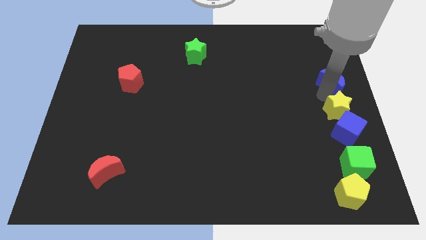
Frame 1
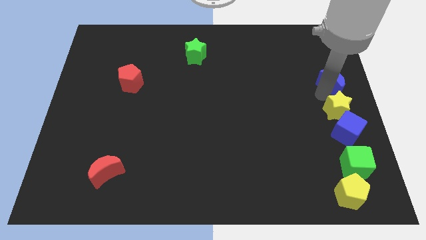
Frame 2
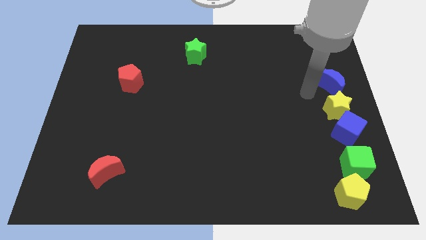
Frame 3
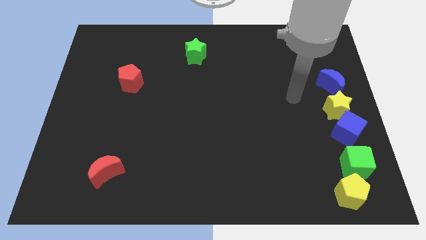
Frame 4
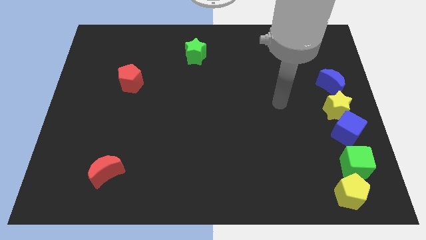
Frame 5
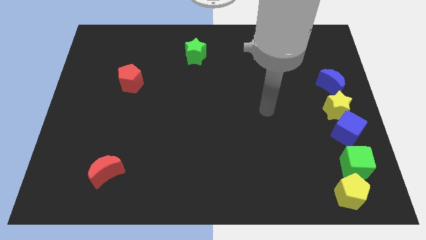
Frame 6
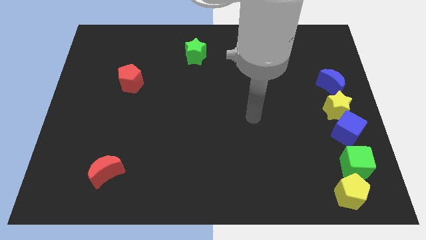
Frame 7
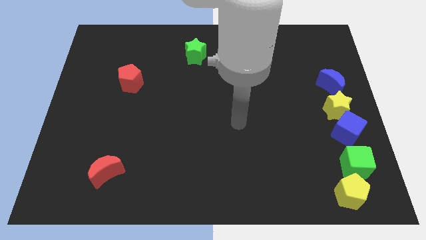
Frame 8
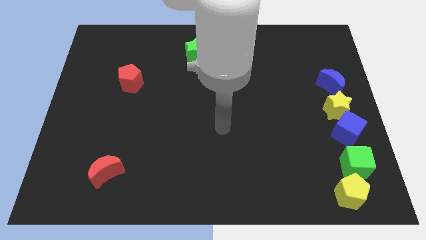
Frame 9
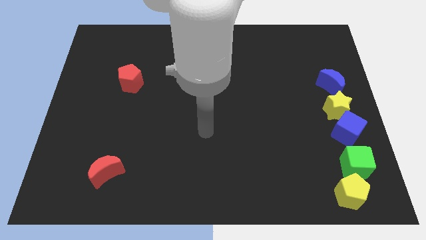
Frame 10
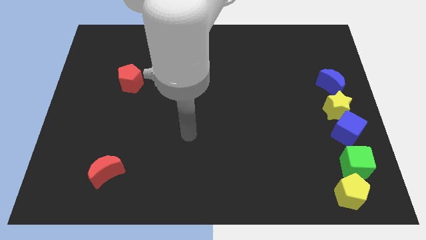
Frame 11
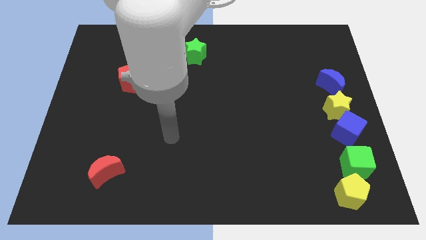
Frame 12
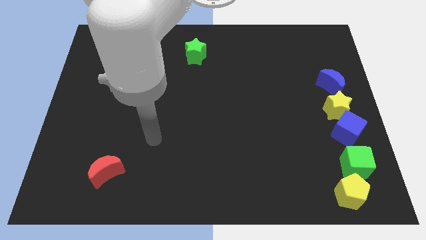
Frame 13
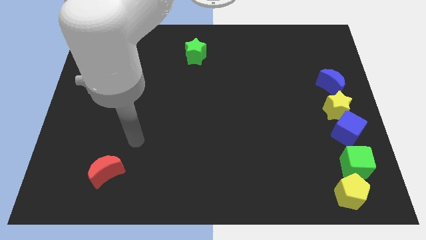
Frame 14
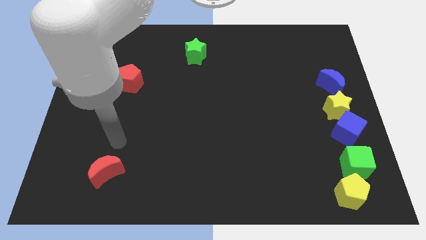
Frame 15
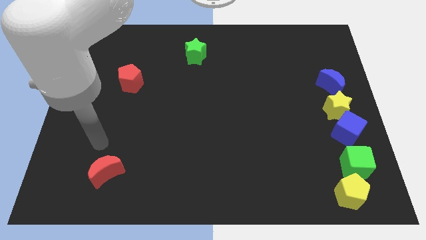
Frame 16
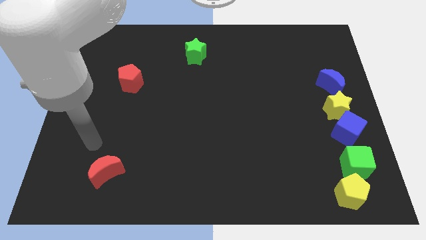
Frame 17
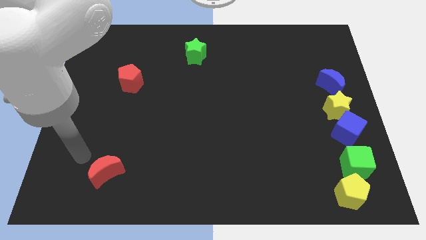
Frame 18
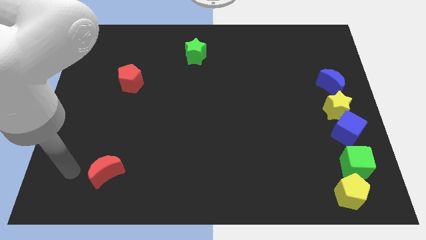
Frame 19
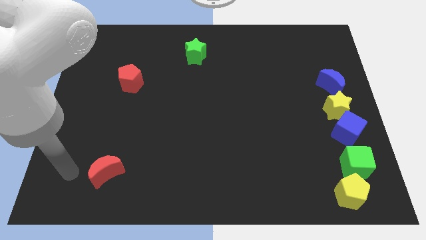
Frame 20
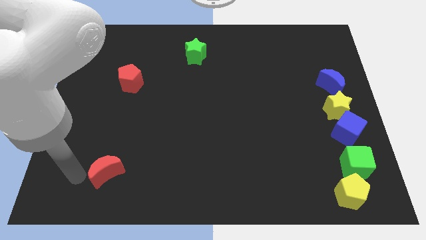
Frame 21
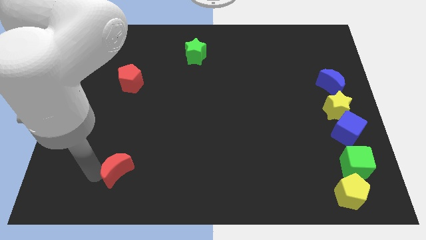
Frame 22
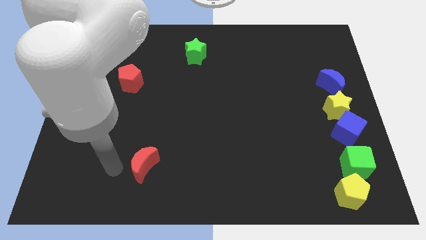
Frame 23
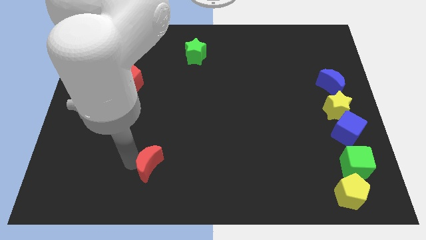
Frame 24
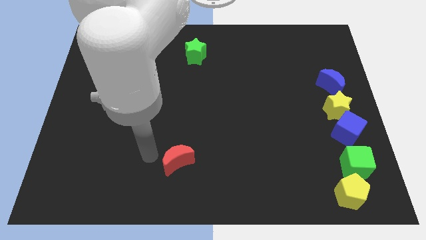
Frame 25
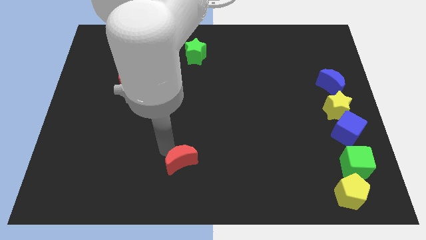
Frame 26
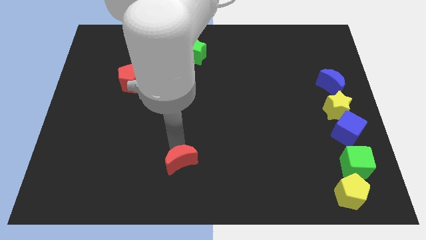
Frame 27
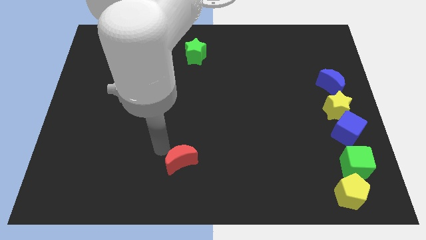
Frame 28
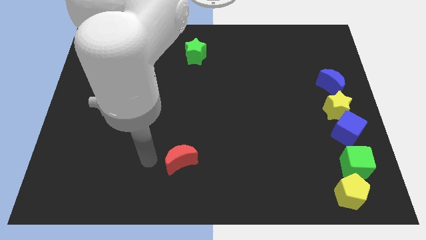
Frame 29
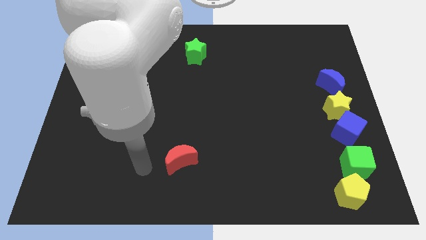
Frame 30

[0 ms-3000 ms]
put the red moon parallel to green cube

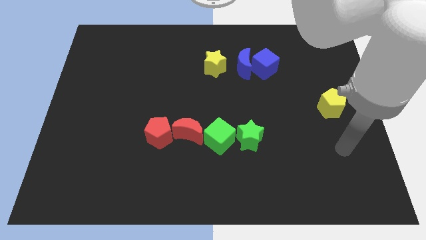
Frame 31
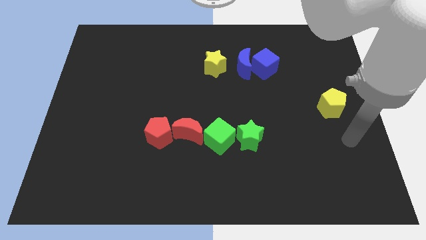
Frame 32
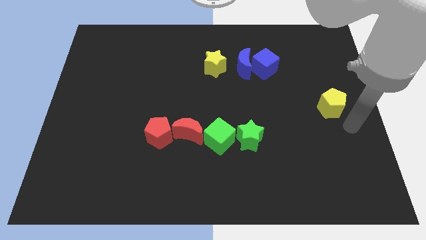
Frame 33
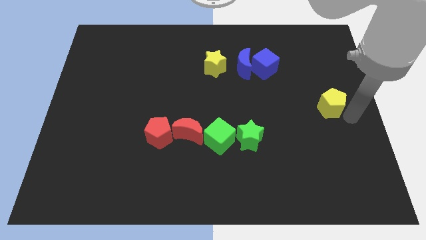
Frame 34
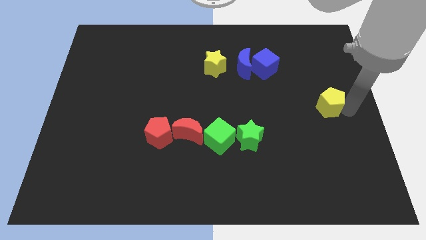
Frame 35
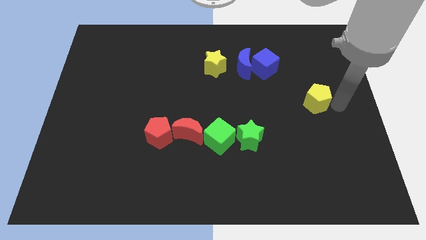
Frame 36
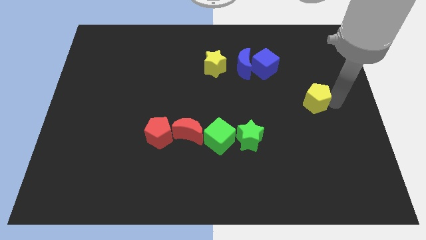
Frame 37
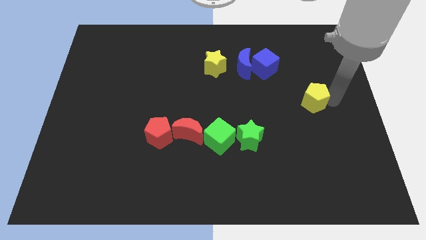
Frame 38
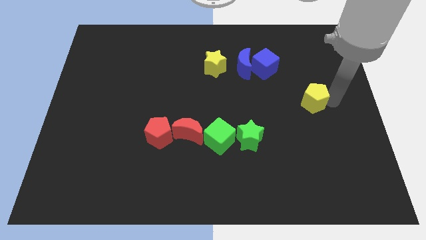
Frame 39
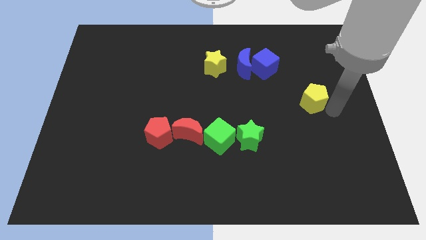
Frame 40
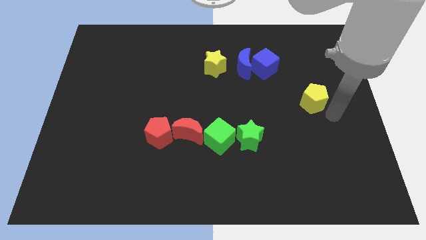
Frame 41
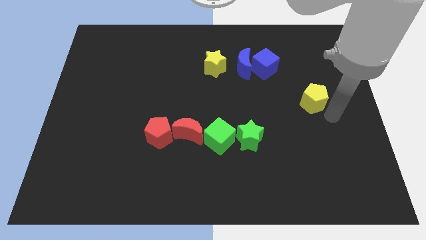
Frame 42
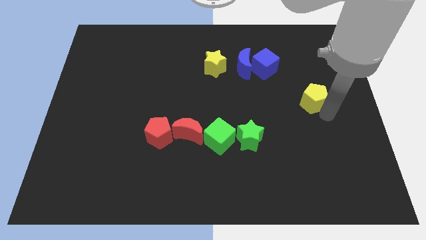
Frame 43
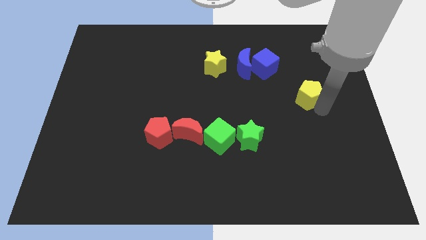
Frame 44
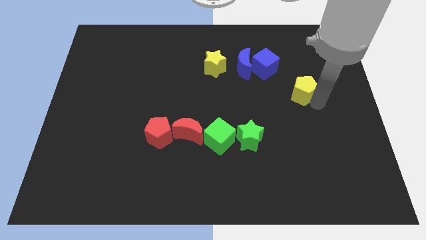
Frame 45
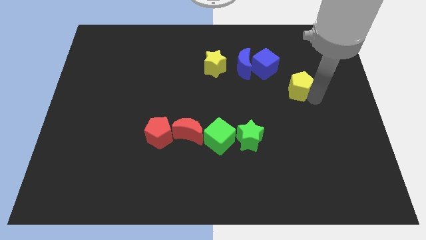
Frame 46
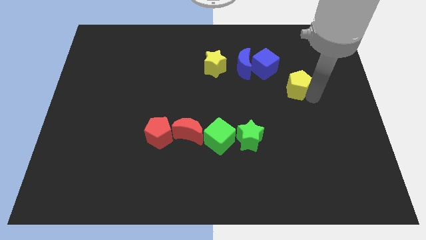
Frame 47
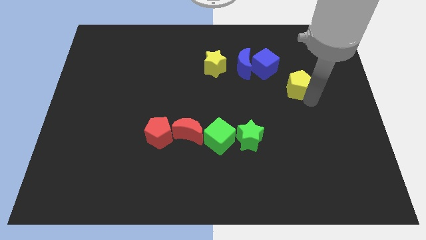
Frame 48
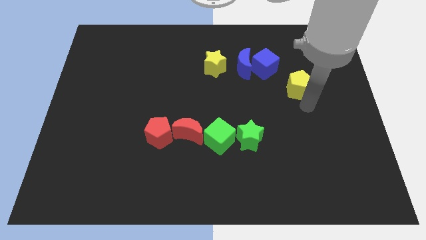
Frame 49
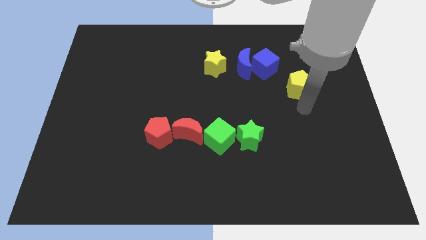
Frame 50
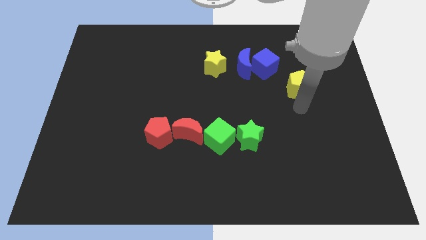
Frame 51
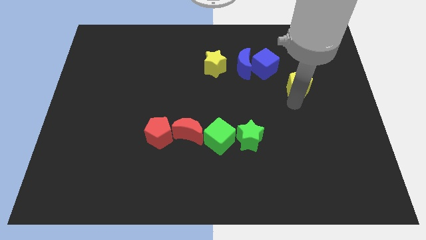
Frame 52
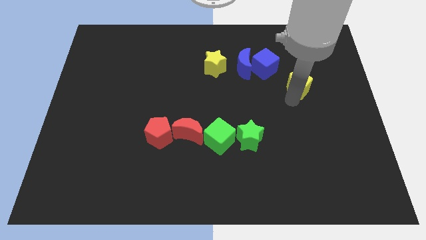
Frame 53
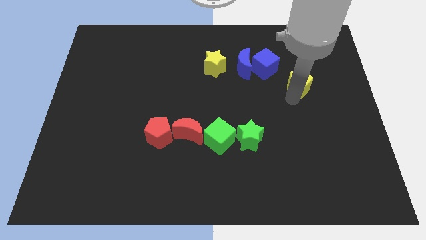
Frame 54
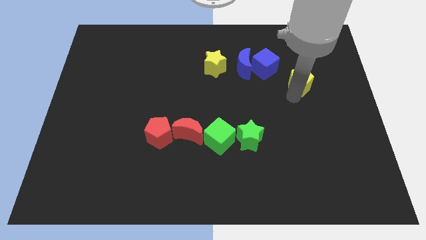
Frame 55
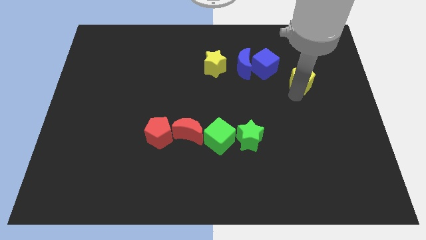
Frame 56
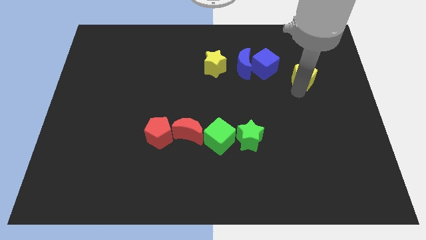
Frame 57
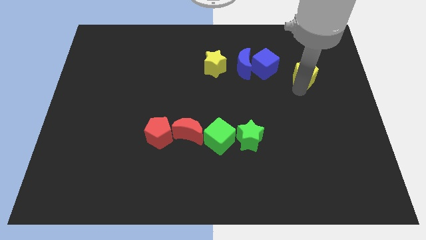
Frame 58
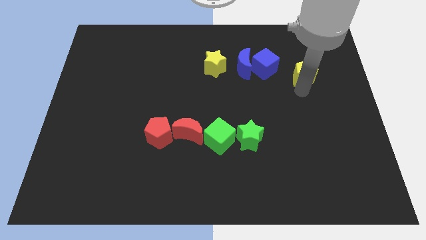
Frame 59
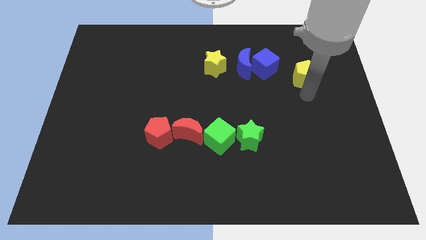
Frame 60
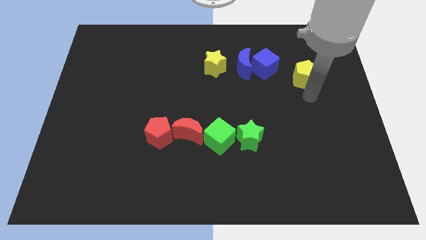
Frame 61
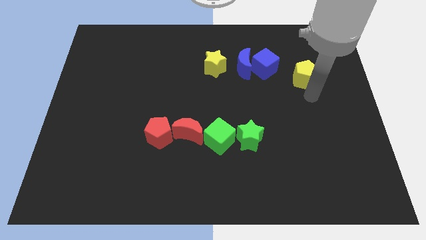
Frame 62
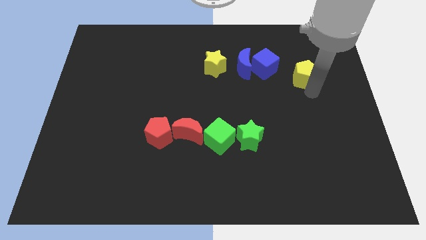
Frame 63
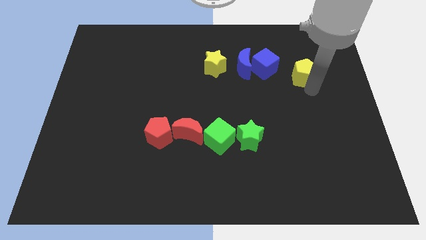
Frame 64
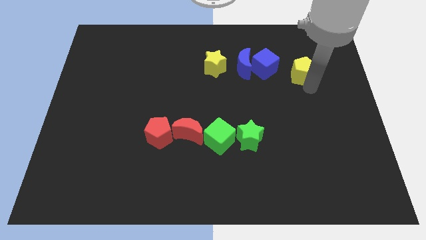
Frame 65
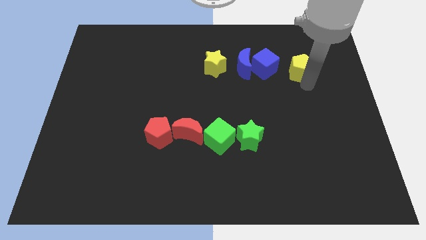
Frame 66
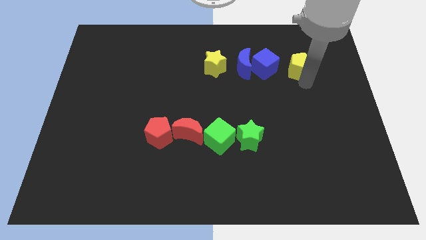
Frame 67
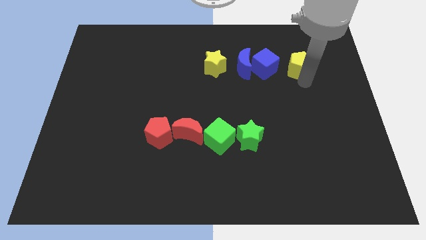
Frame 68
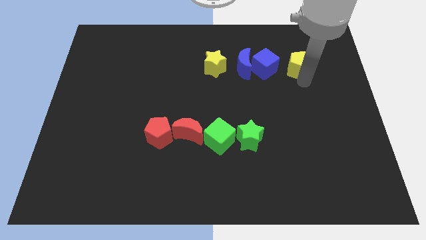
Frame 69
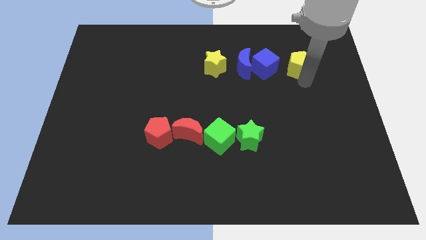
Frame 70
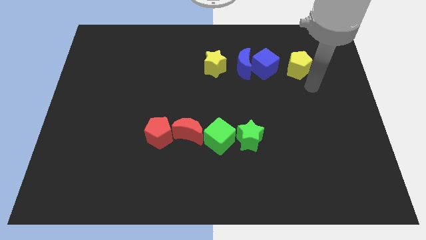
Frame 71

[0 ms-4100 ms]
push the yellow pentagon to the right side of the blue cube

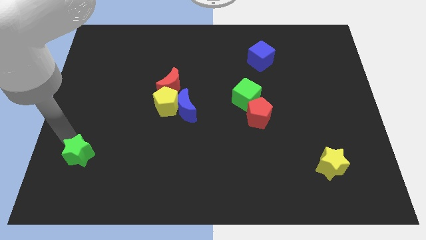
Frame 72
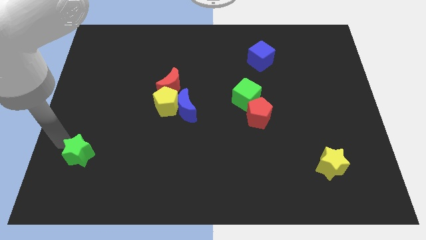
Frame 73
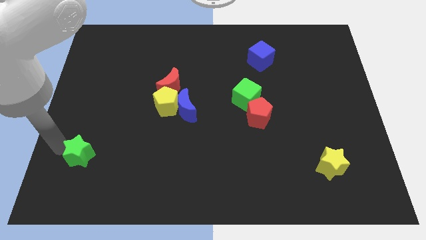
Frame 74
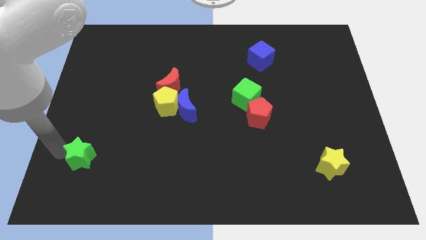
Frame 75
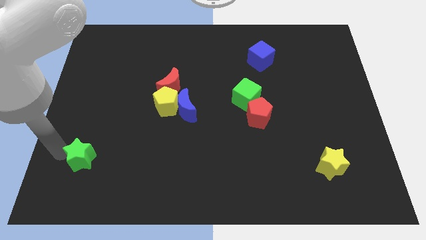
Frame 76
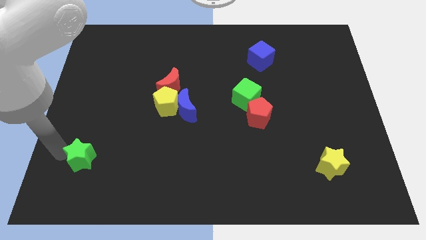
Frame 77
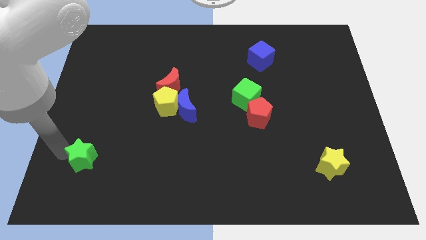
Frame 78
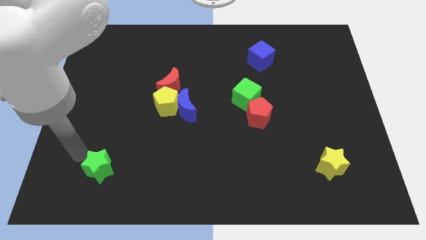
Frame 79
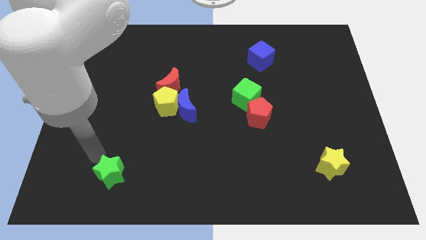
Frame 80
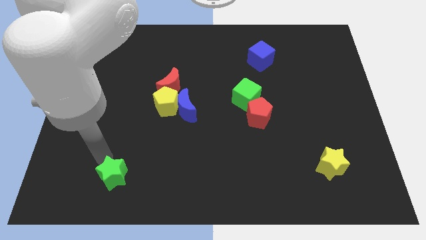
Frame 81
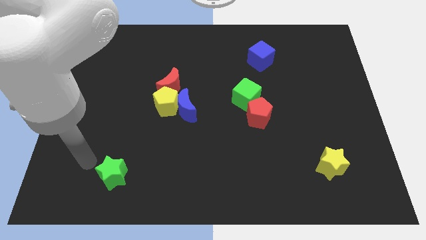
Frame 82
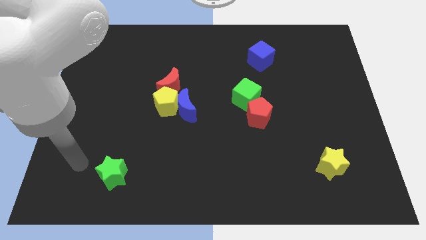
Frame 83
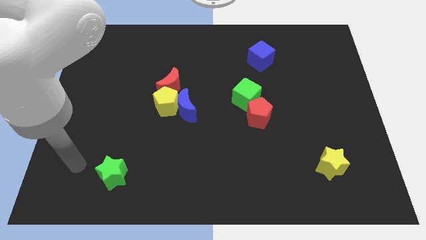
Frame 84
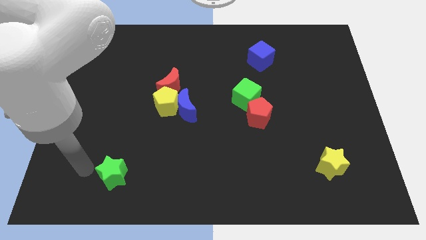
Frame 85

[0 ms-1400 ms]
push green star slightly to the right

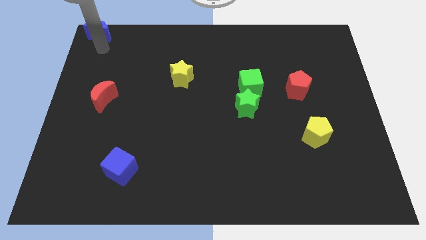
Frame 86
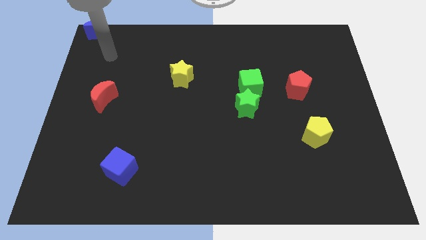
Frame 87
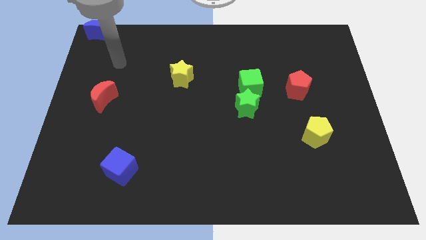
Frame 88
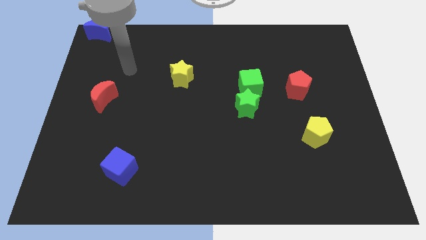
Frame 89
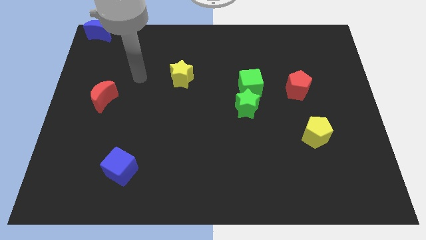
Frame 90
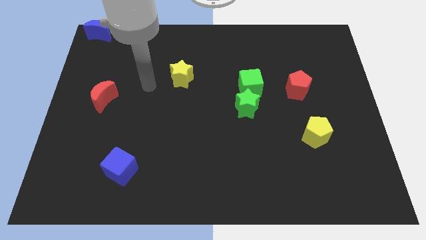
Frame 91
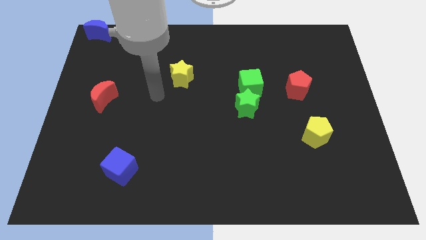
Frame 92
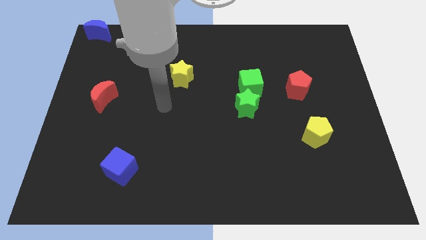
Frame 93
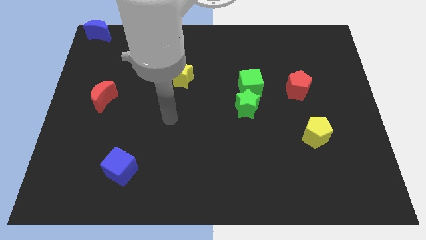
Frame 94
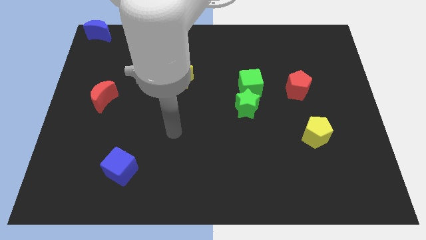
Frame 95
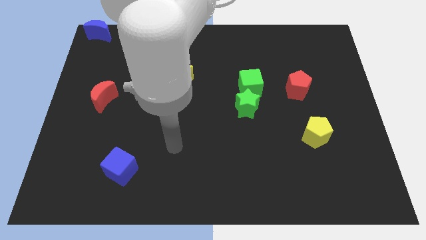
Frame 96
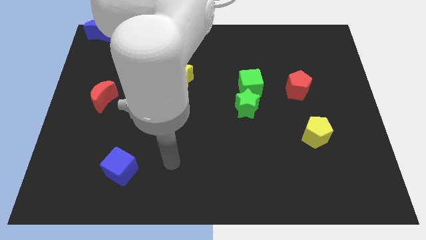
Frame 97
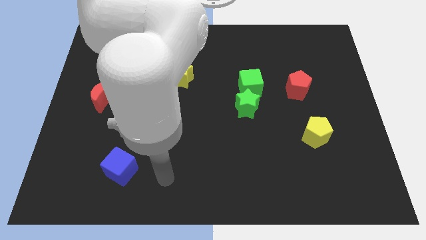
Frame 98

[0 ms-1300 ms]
point your arm at the right of the blue cube
